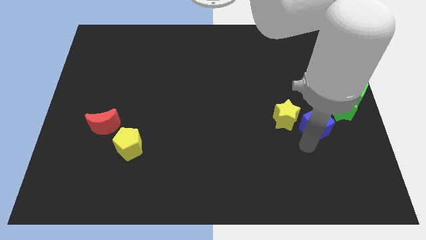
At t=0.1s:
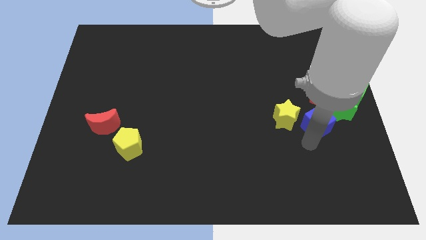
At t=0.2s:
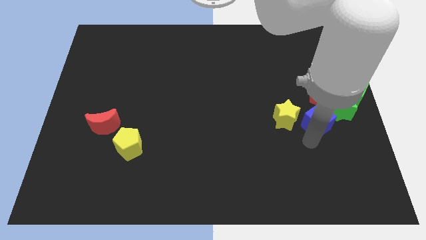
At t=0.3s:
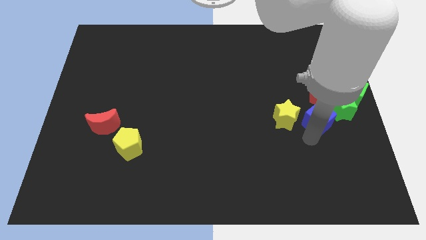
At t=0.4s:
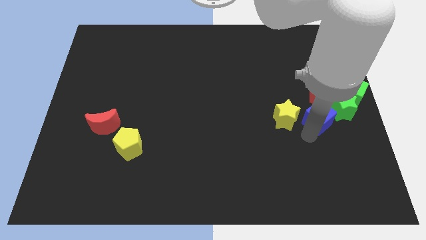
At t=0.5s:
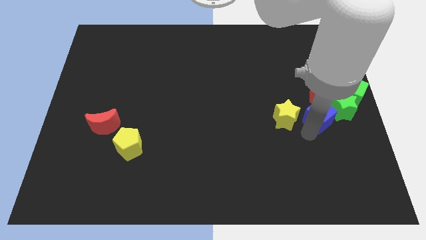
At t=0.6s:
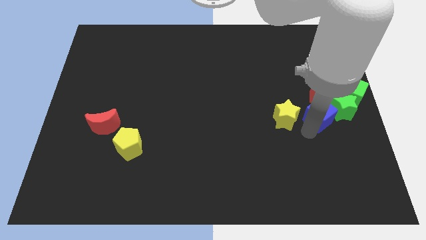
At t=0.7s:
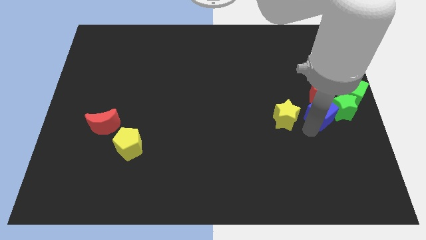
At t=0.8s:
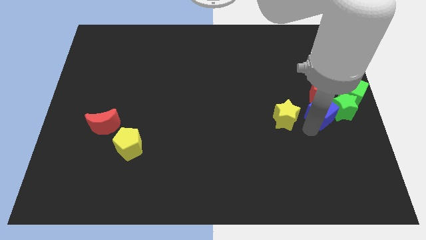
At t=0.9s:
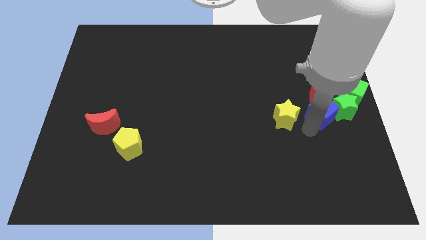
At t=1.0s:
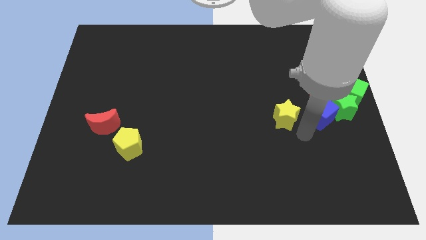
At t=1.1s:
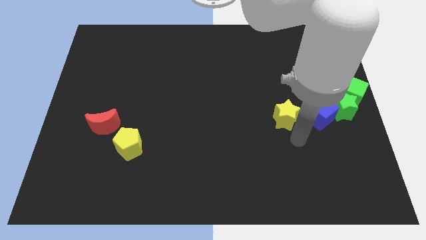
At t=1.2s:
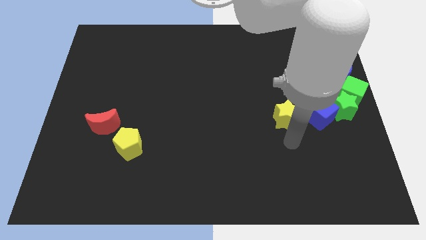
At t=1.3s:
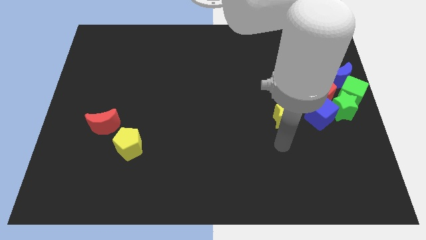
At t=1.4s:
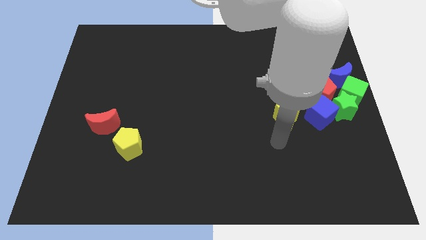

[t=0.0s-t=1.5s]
move the blue cube below the red pentagon

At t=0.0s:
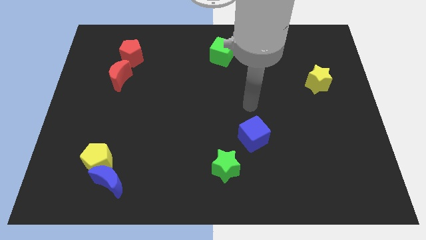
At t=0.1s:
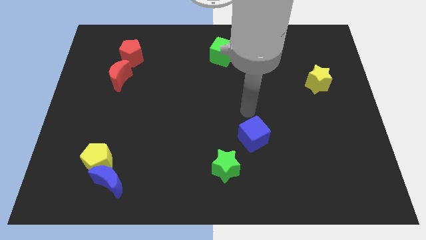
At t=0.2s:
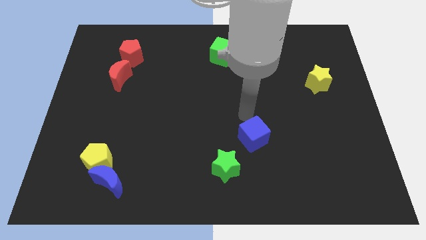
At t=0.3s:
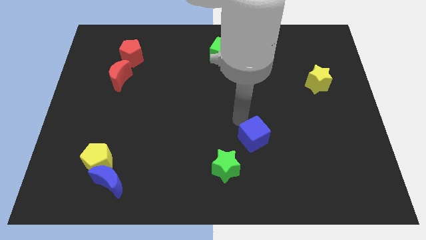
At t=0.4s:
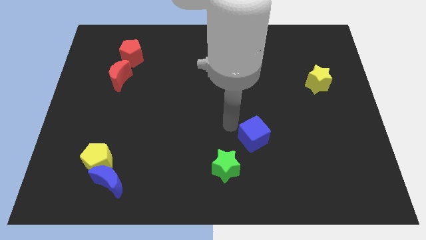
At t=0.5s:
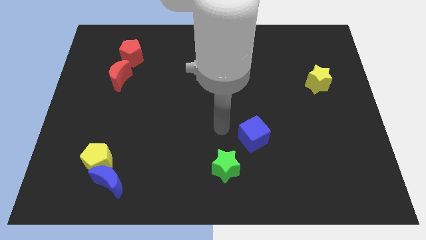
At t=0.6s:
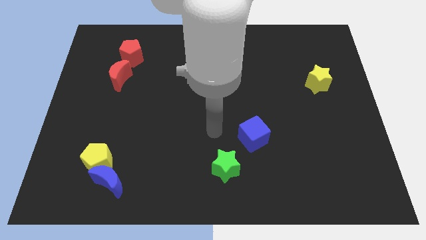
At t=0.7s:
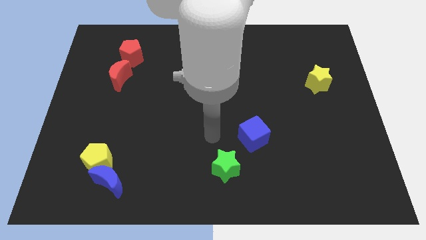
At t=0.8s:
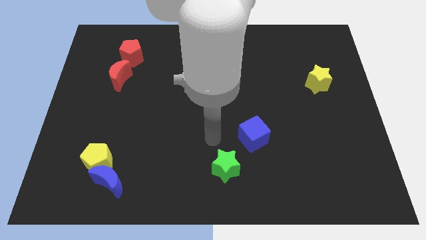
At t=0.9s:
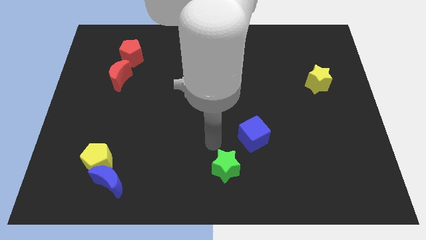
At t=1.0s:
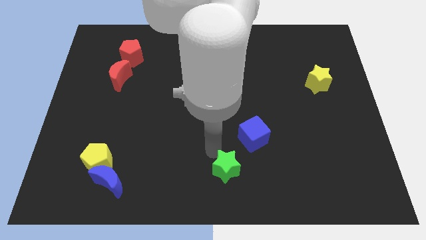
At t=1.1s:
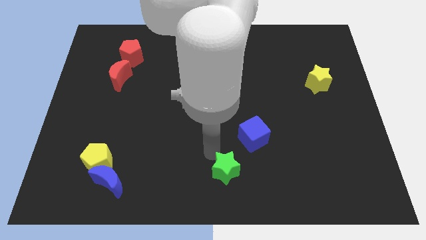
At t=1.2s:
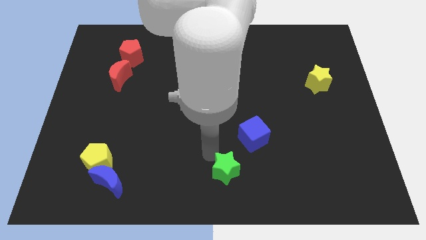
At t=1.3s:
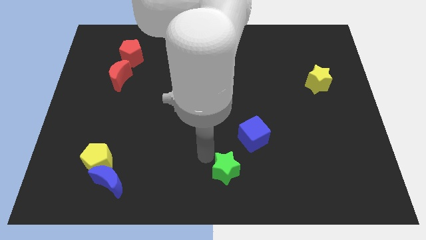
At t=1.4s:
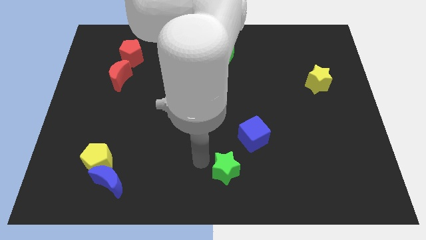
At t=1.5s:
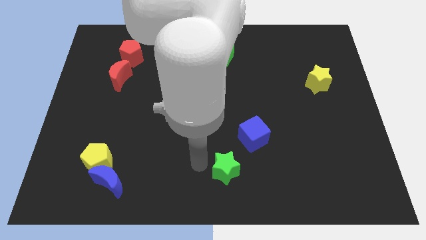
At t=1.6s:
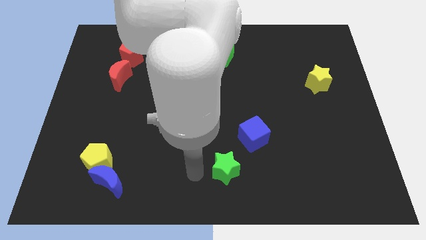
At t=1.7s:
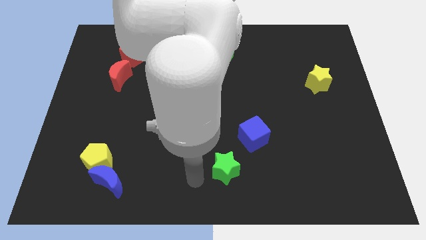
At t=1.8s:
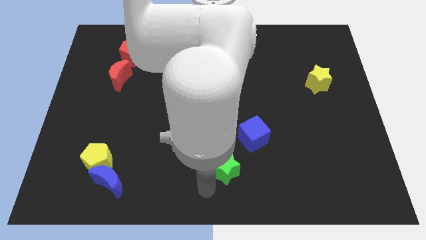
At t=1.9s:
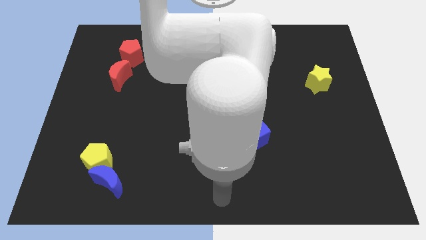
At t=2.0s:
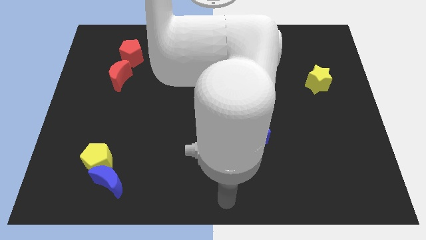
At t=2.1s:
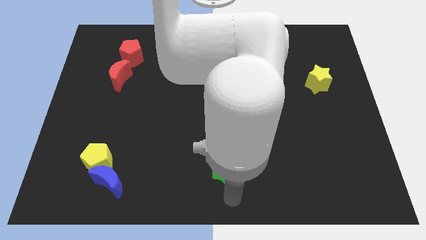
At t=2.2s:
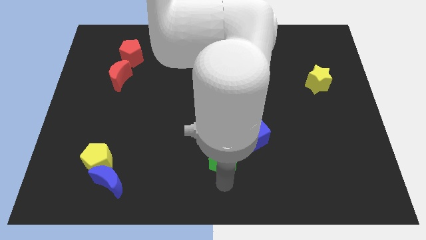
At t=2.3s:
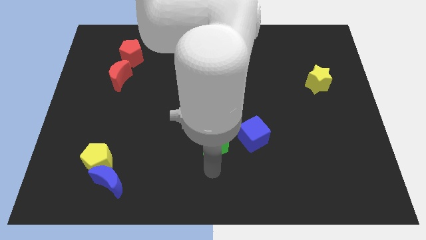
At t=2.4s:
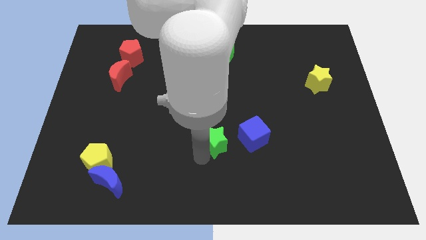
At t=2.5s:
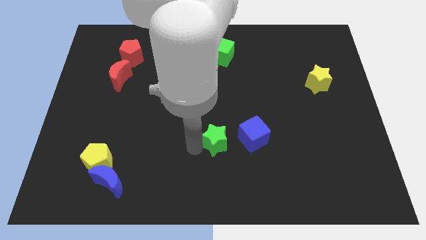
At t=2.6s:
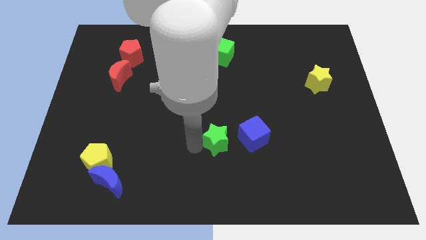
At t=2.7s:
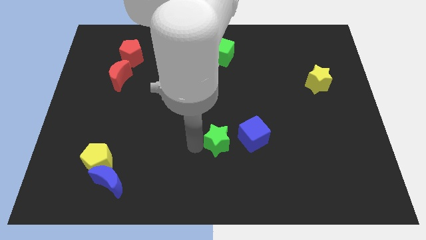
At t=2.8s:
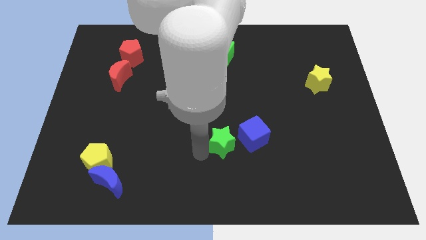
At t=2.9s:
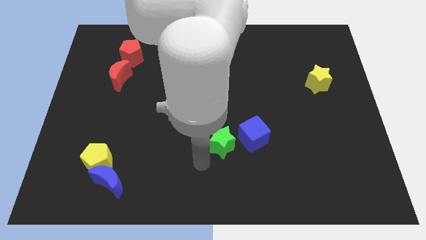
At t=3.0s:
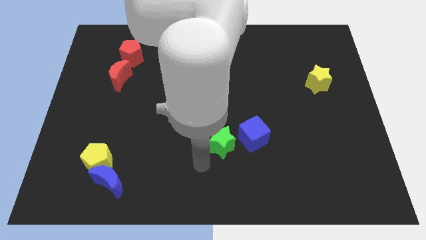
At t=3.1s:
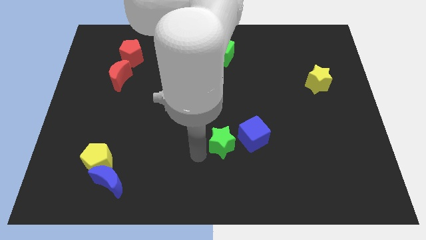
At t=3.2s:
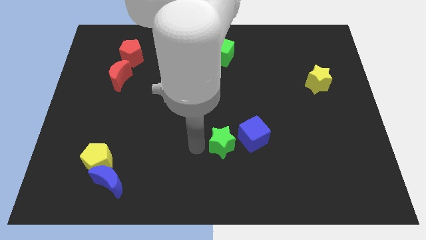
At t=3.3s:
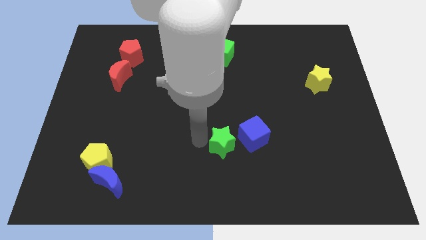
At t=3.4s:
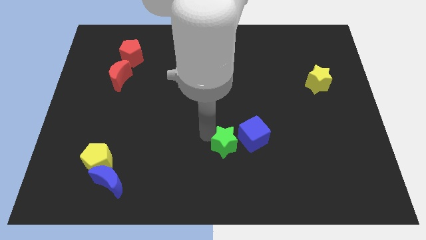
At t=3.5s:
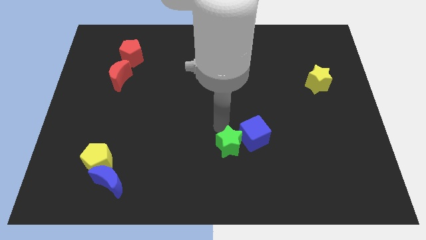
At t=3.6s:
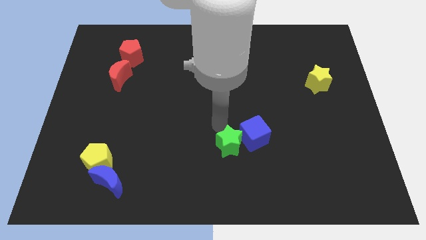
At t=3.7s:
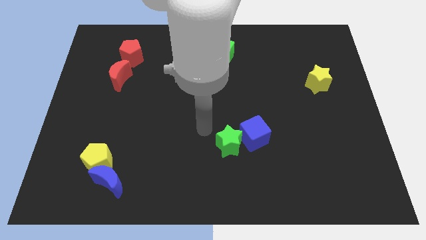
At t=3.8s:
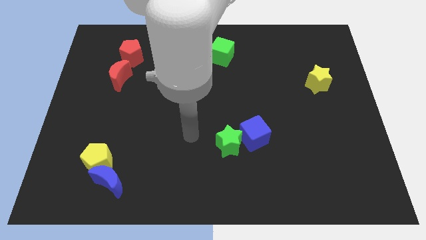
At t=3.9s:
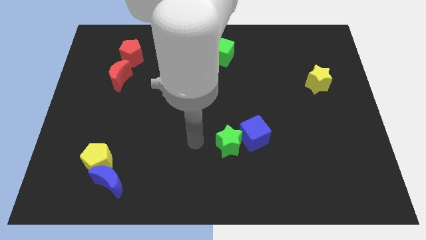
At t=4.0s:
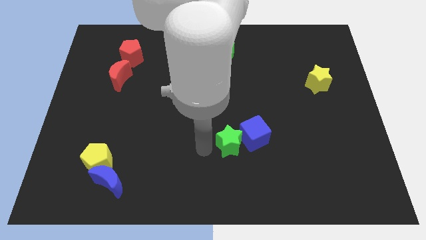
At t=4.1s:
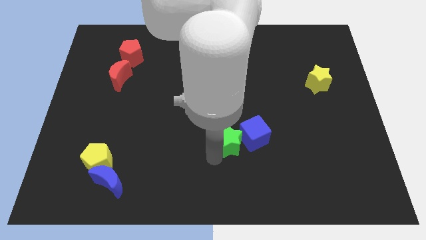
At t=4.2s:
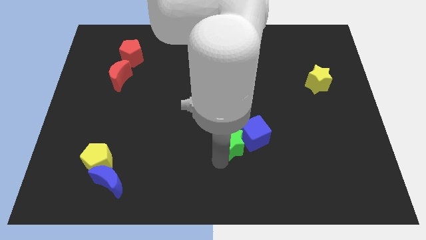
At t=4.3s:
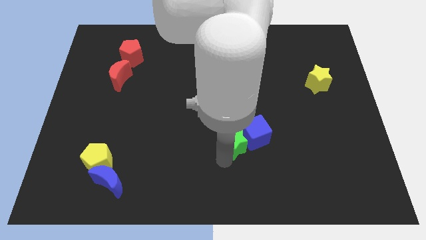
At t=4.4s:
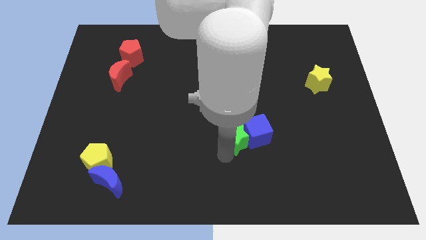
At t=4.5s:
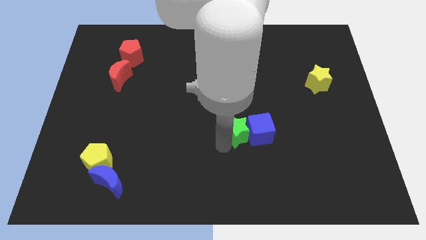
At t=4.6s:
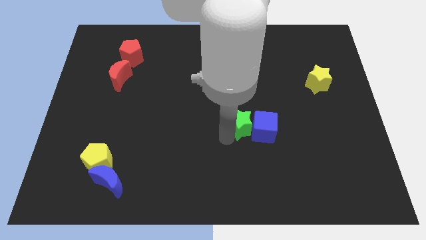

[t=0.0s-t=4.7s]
put the green star on the left side of the blue cube

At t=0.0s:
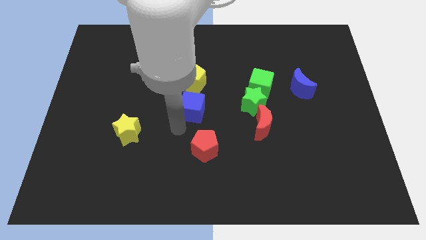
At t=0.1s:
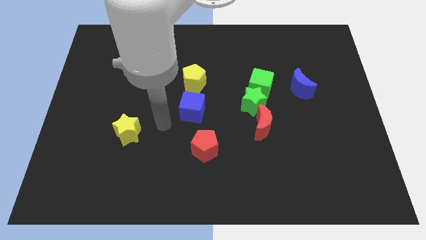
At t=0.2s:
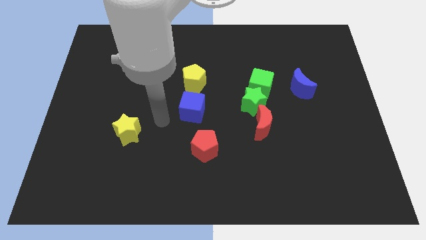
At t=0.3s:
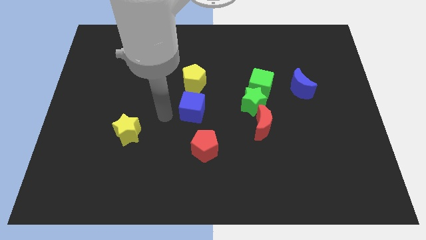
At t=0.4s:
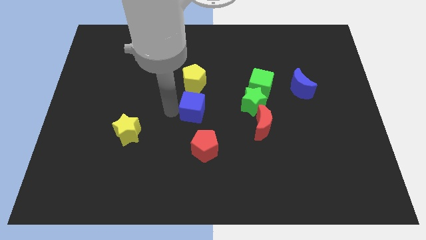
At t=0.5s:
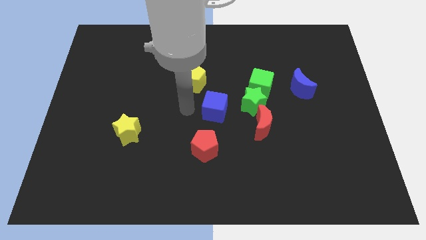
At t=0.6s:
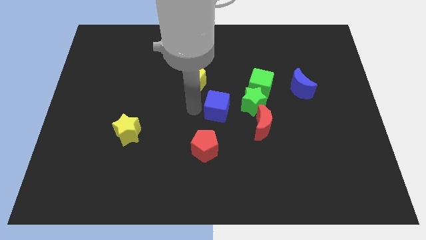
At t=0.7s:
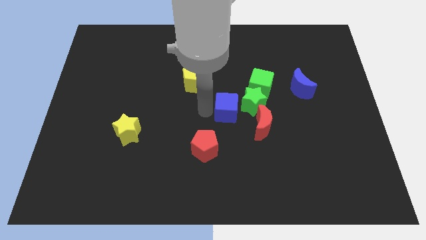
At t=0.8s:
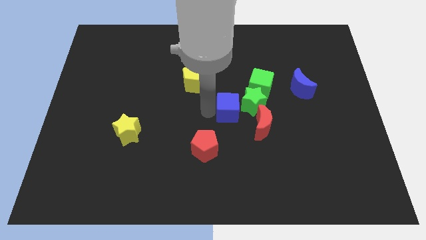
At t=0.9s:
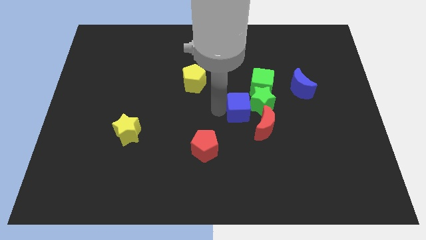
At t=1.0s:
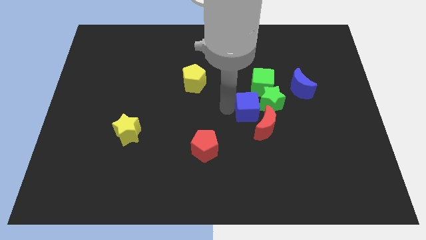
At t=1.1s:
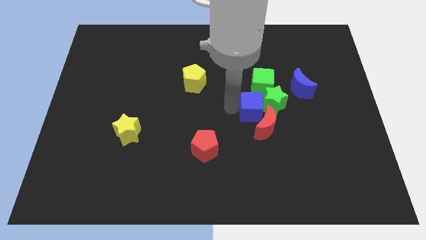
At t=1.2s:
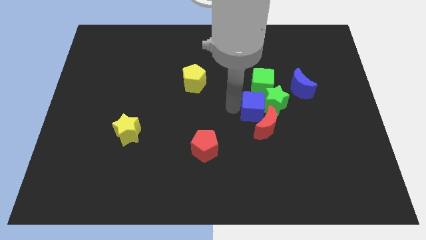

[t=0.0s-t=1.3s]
move the blue cube into the green star

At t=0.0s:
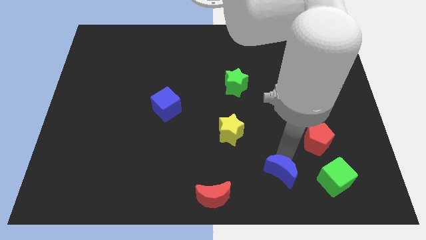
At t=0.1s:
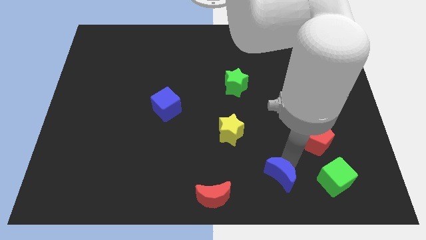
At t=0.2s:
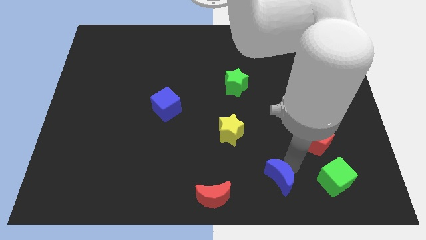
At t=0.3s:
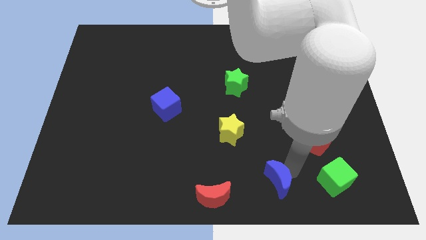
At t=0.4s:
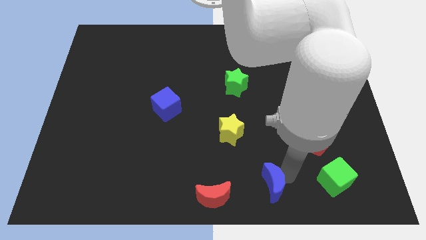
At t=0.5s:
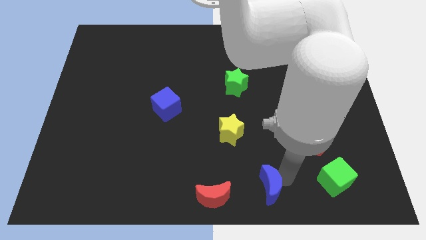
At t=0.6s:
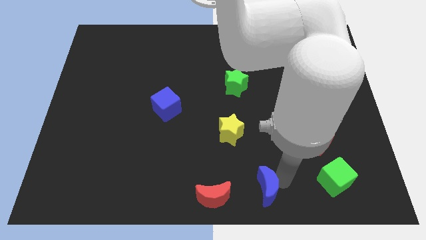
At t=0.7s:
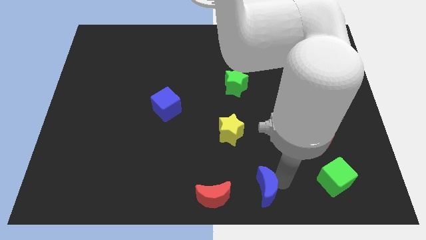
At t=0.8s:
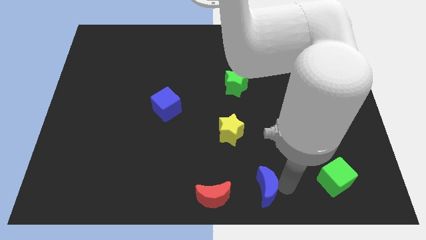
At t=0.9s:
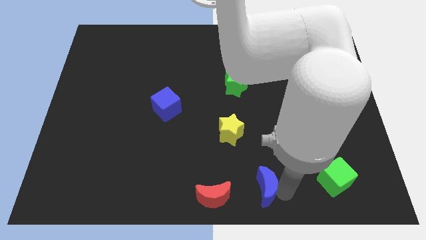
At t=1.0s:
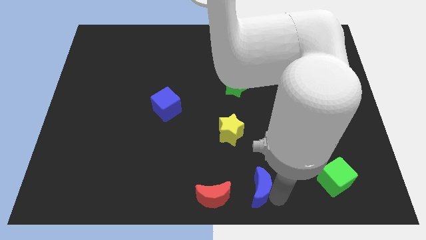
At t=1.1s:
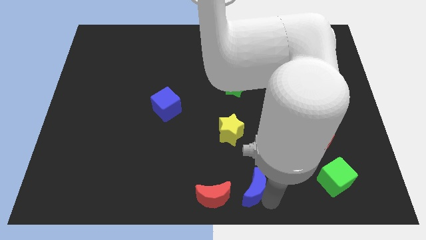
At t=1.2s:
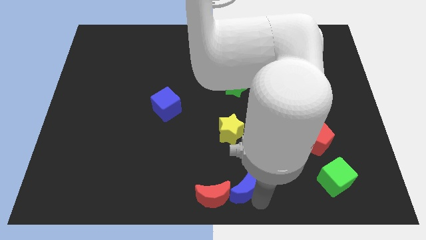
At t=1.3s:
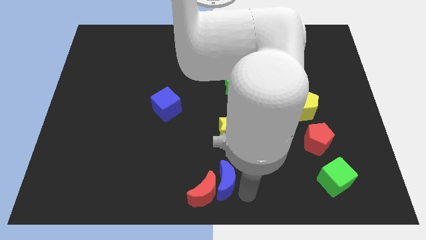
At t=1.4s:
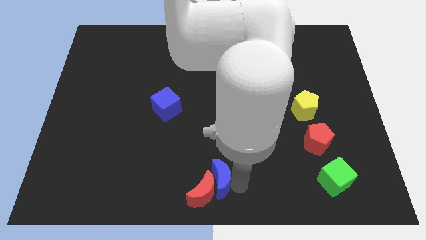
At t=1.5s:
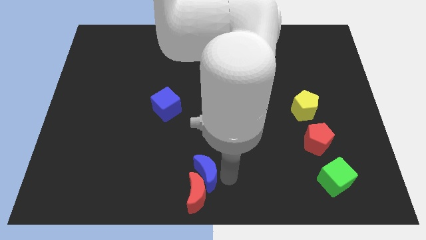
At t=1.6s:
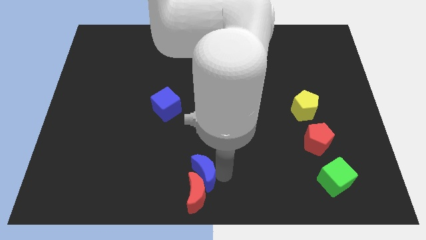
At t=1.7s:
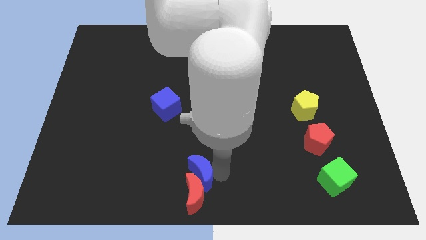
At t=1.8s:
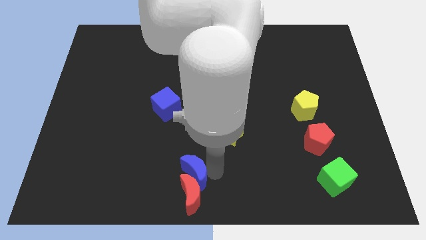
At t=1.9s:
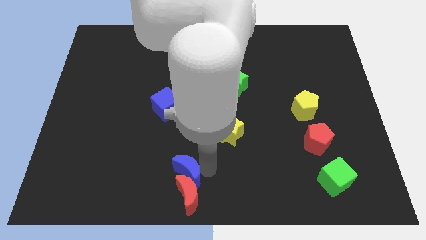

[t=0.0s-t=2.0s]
push the blue moon into red moon
